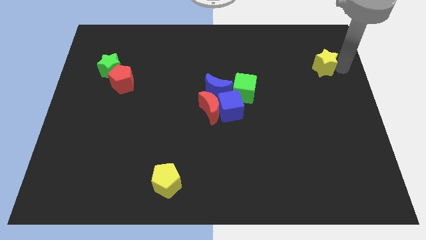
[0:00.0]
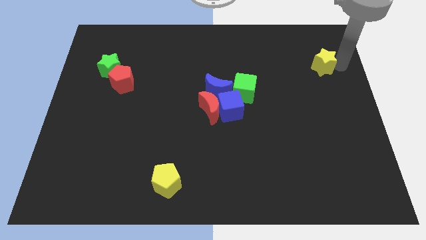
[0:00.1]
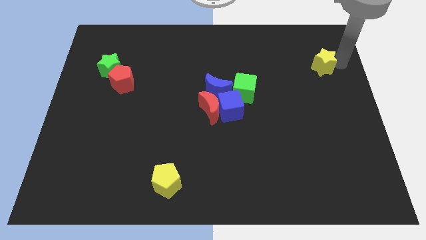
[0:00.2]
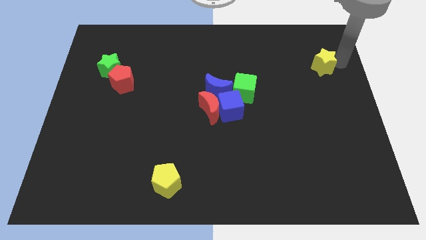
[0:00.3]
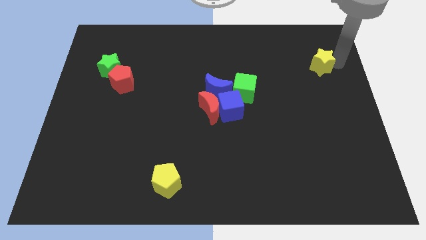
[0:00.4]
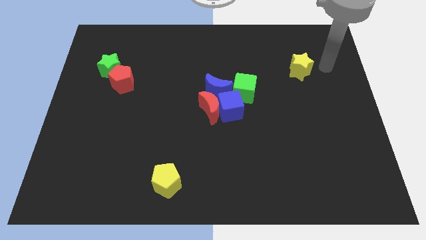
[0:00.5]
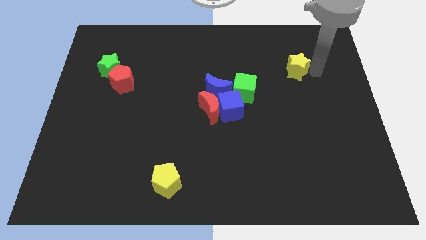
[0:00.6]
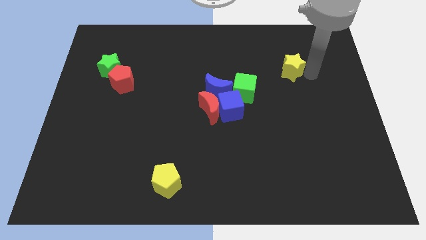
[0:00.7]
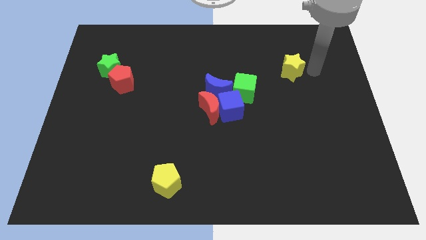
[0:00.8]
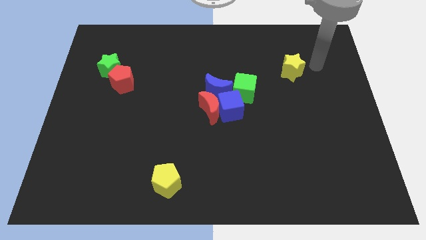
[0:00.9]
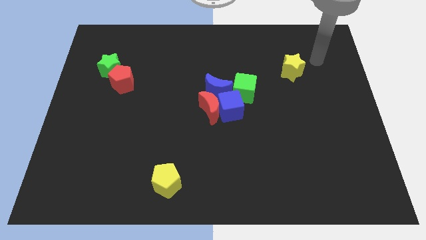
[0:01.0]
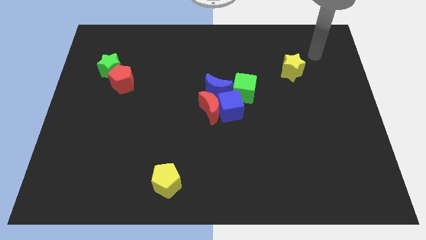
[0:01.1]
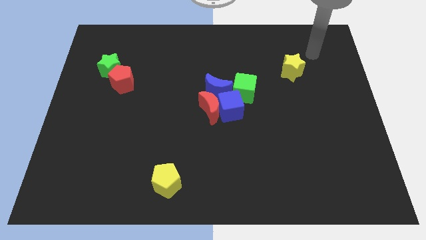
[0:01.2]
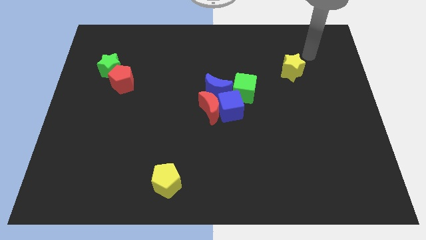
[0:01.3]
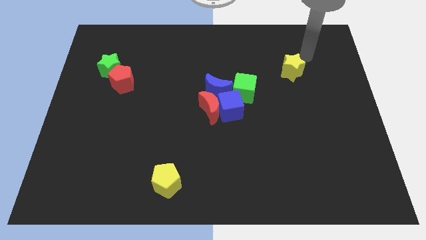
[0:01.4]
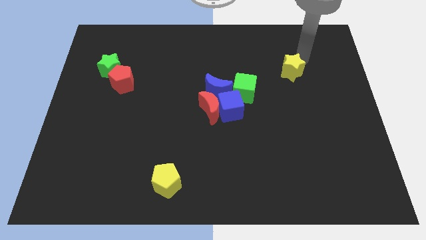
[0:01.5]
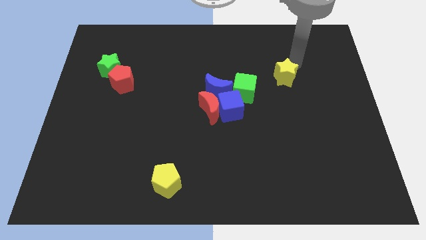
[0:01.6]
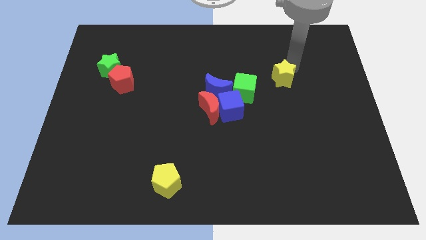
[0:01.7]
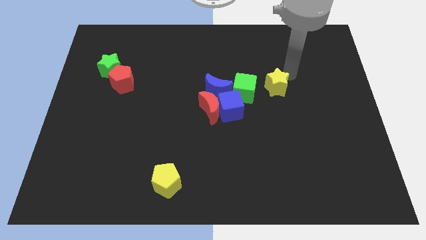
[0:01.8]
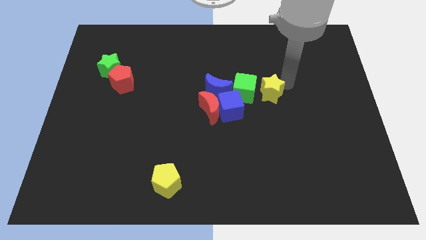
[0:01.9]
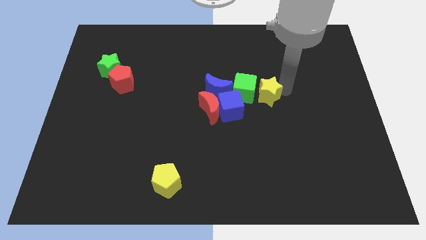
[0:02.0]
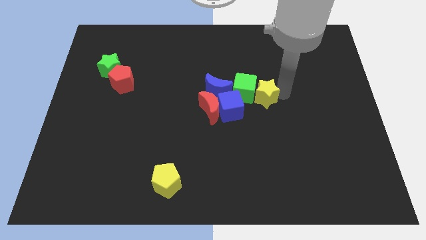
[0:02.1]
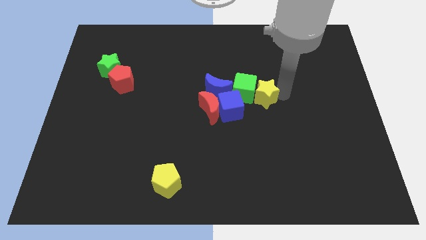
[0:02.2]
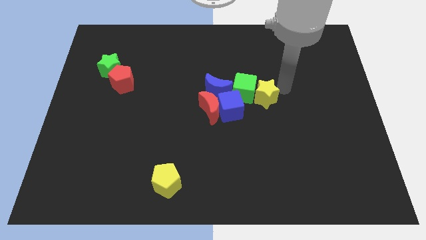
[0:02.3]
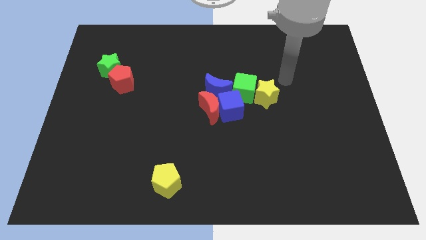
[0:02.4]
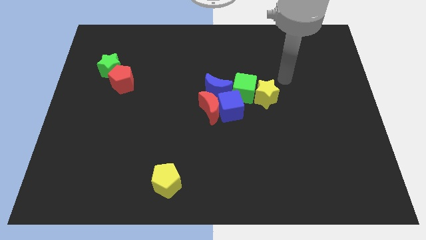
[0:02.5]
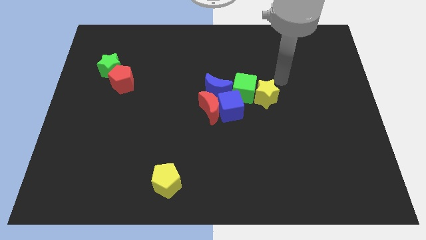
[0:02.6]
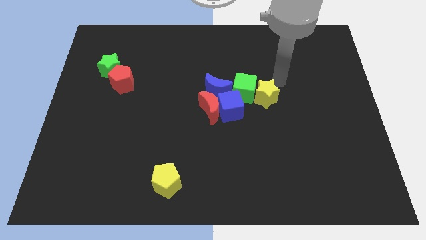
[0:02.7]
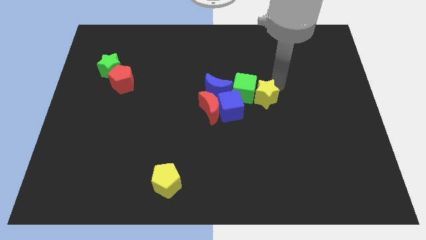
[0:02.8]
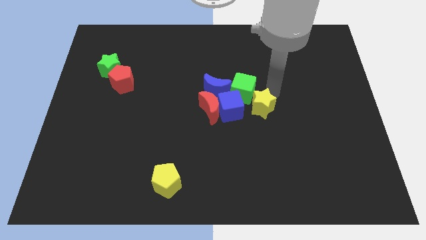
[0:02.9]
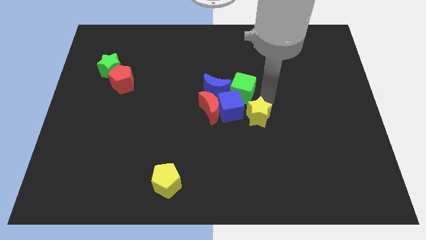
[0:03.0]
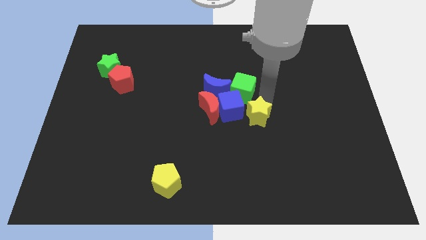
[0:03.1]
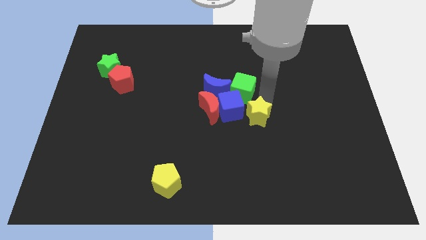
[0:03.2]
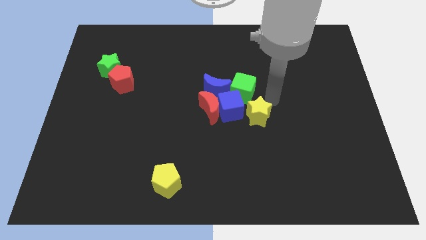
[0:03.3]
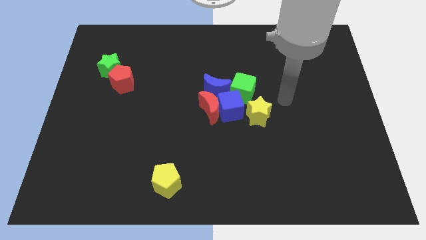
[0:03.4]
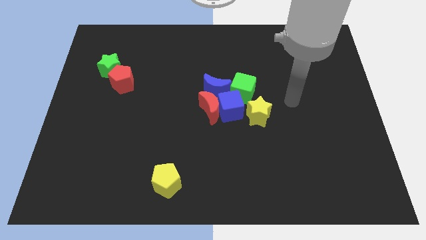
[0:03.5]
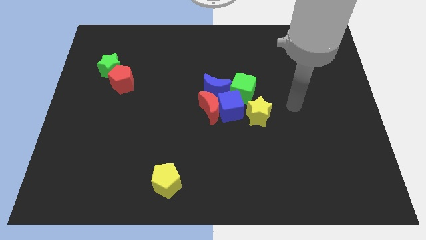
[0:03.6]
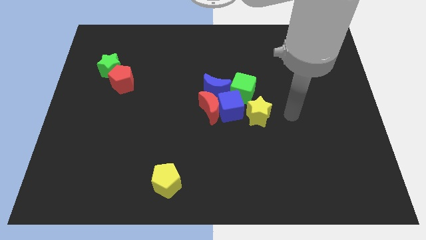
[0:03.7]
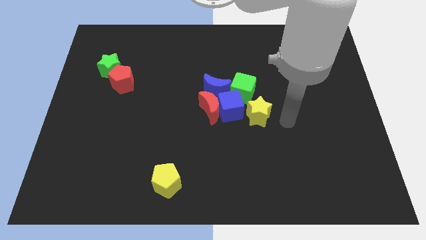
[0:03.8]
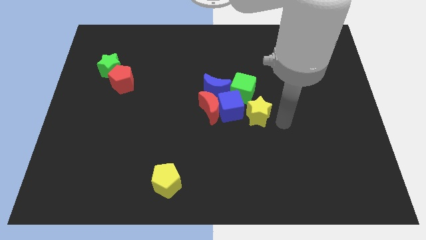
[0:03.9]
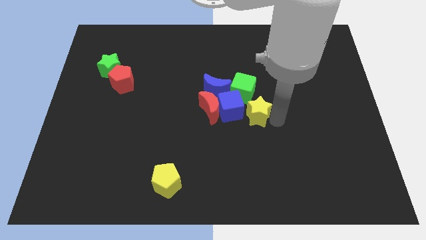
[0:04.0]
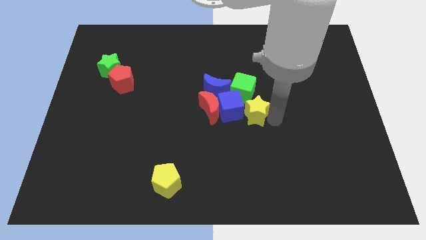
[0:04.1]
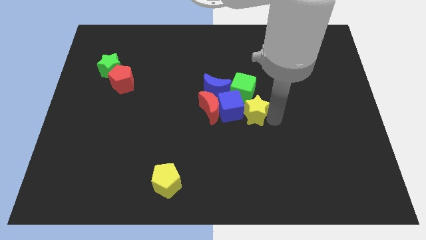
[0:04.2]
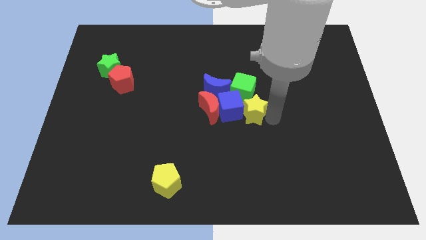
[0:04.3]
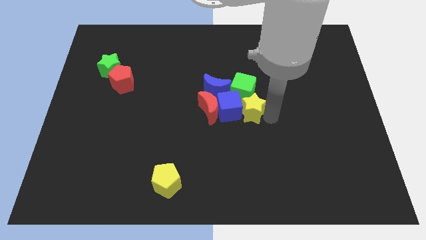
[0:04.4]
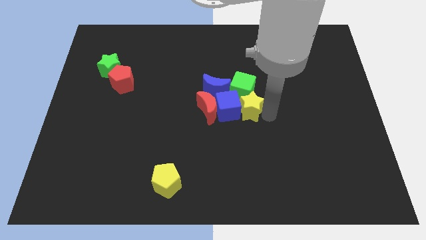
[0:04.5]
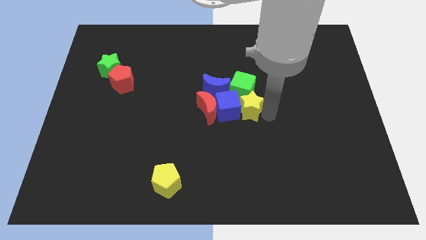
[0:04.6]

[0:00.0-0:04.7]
push the yellow star into the green and blue cubes

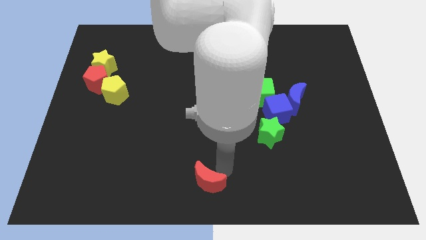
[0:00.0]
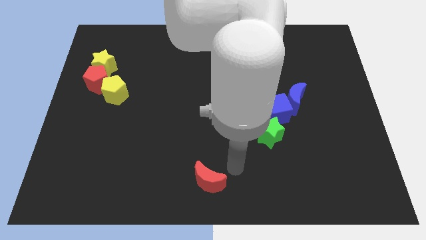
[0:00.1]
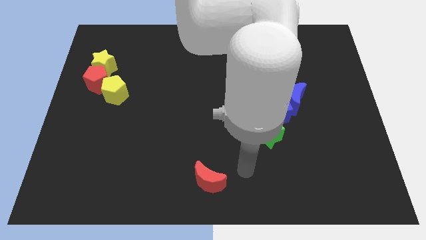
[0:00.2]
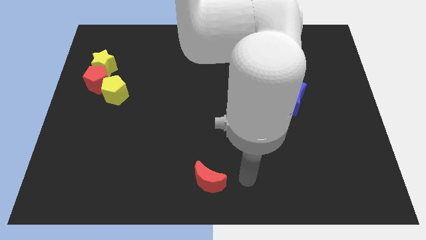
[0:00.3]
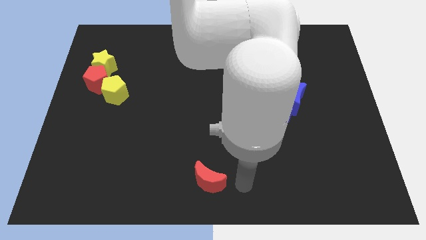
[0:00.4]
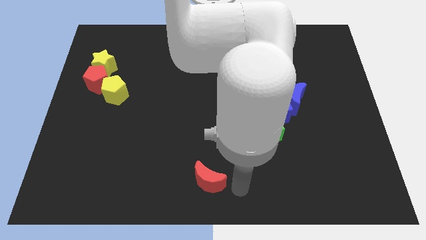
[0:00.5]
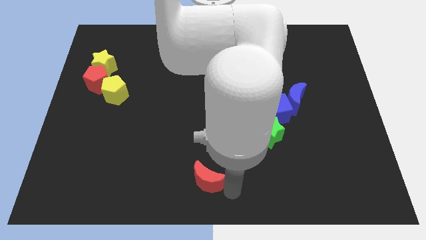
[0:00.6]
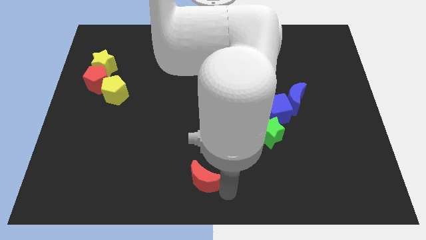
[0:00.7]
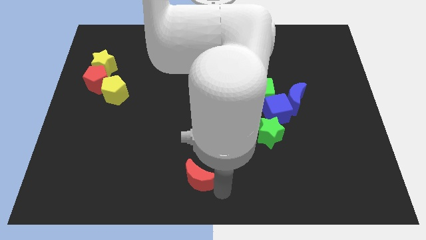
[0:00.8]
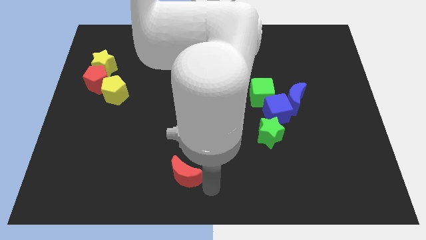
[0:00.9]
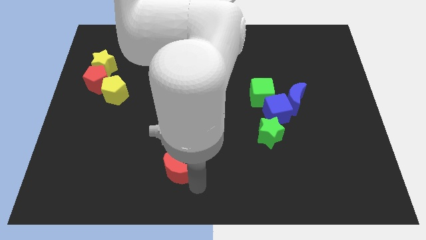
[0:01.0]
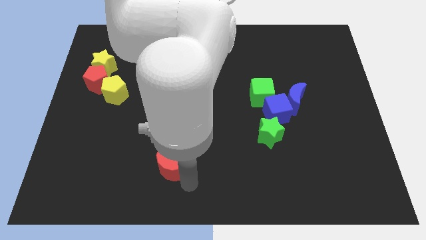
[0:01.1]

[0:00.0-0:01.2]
move red moon slightly to the left side

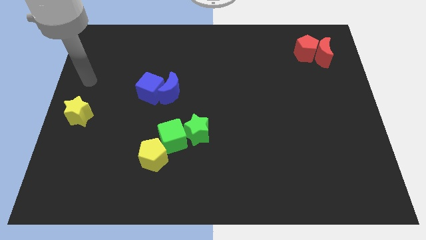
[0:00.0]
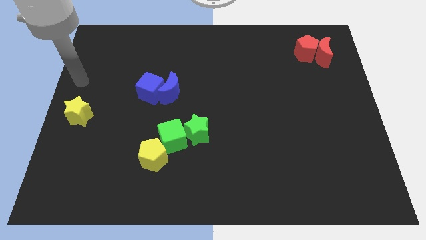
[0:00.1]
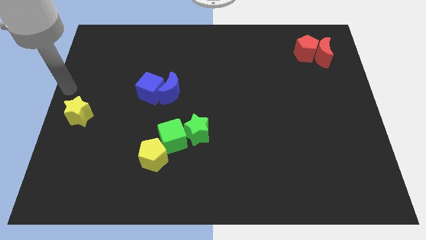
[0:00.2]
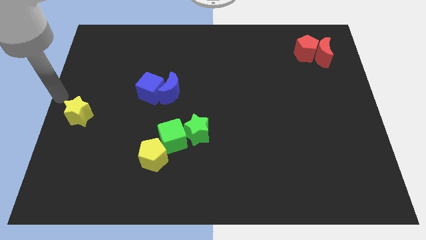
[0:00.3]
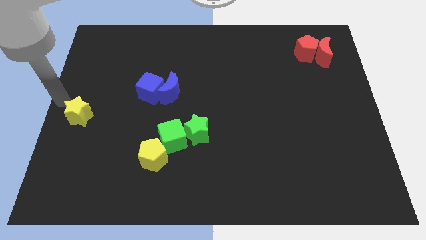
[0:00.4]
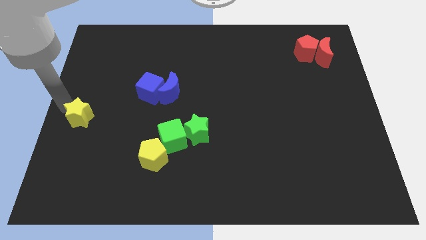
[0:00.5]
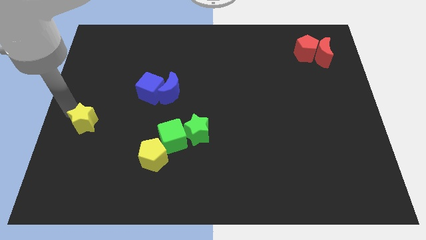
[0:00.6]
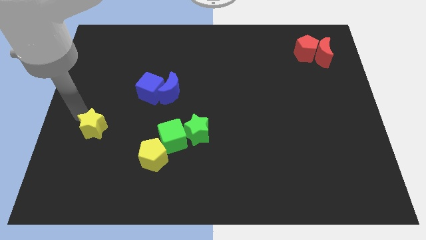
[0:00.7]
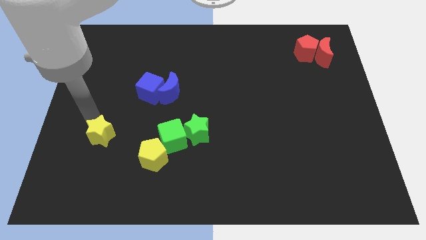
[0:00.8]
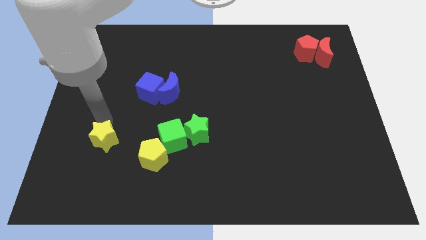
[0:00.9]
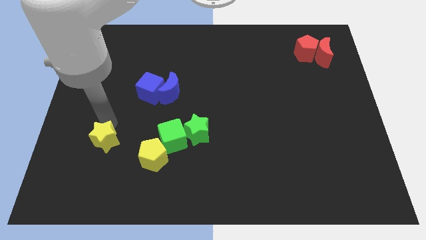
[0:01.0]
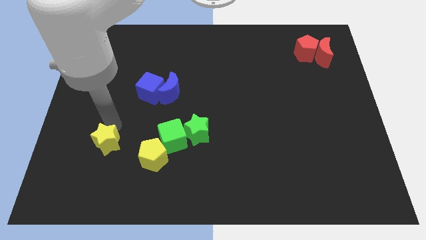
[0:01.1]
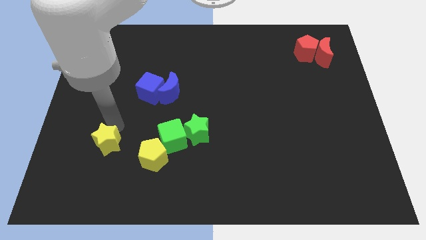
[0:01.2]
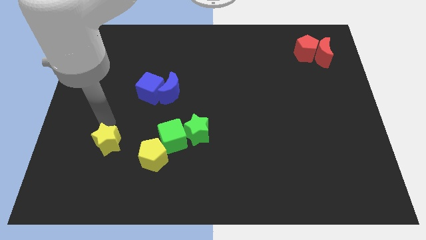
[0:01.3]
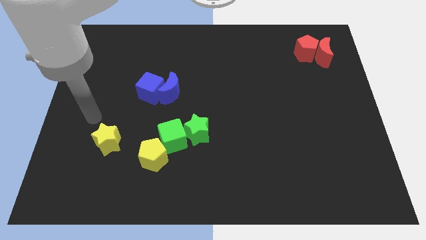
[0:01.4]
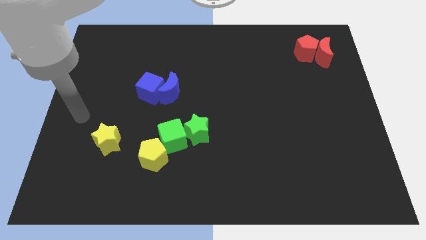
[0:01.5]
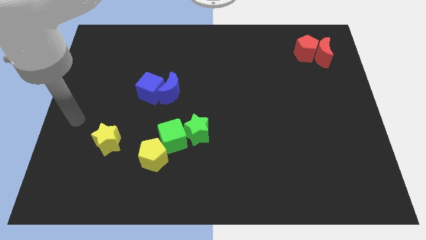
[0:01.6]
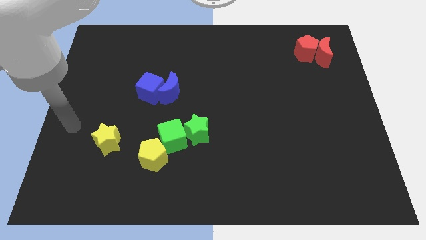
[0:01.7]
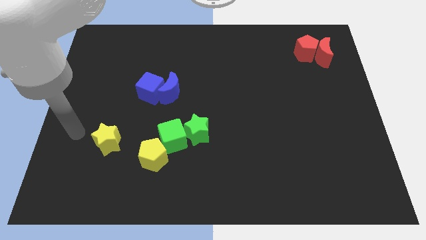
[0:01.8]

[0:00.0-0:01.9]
move the yellow star parallel to the green cube

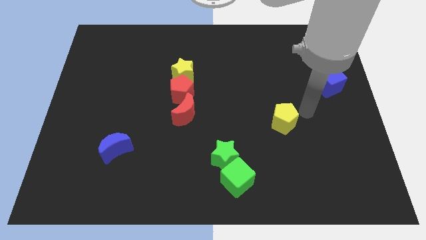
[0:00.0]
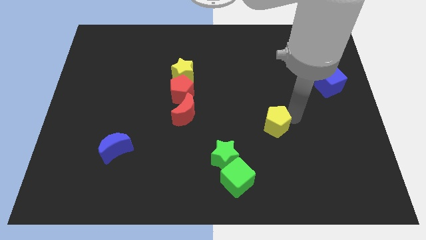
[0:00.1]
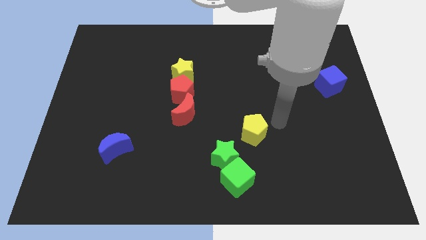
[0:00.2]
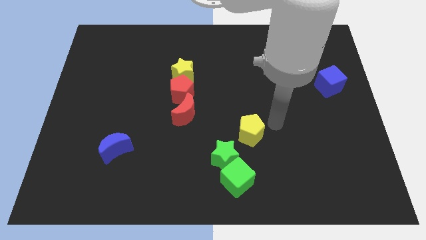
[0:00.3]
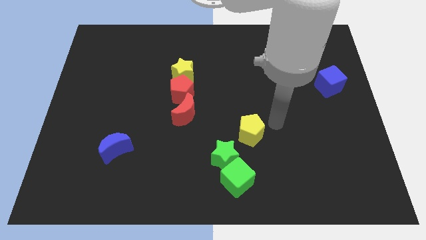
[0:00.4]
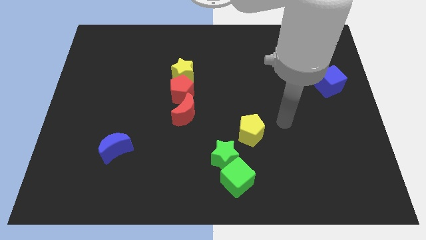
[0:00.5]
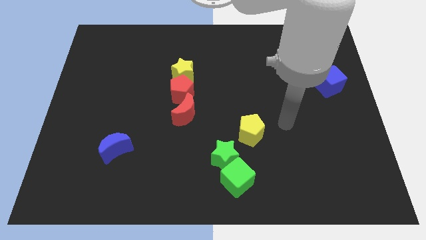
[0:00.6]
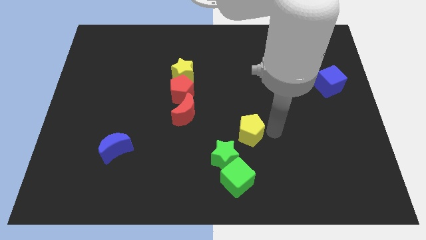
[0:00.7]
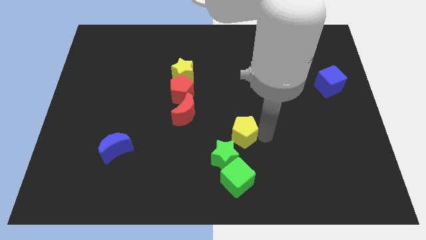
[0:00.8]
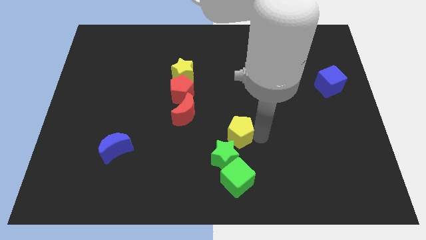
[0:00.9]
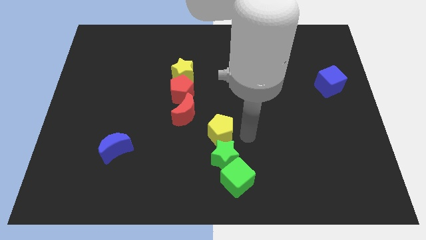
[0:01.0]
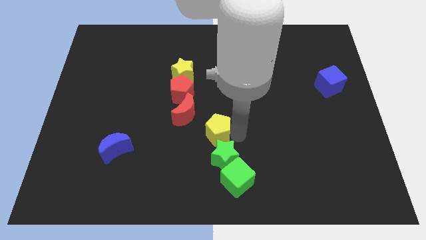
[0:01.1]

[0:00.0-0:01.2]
add yellow pentagon on top of green star
